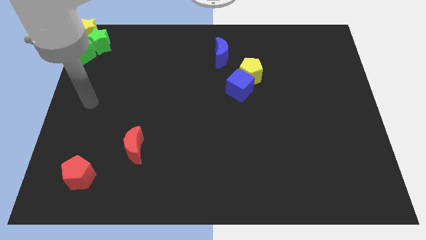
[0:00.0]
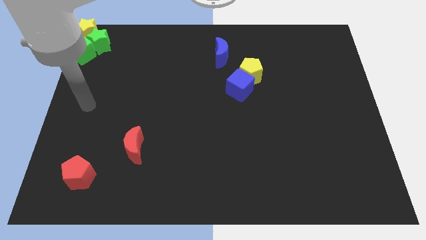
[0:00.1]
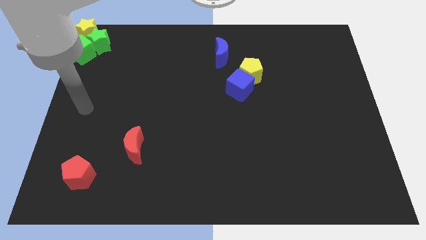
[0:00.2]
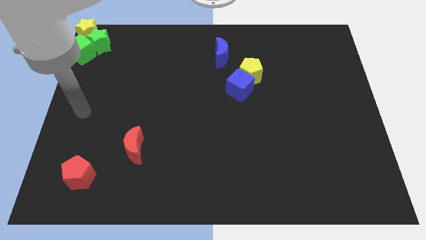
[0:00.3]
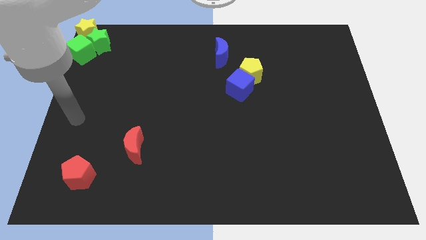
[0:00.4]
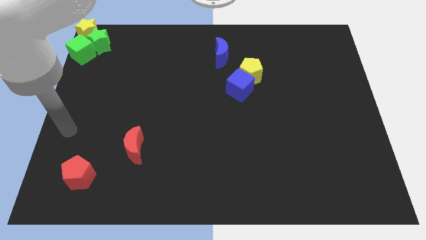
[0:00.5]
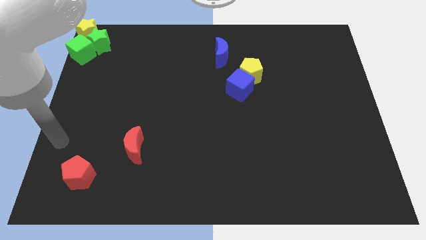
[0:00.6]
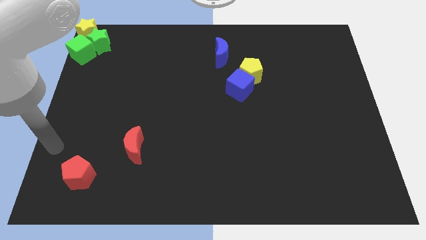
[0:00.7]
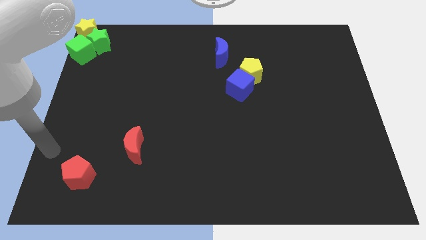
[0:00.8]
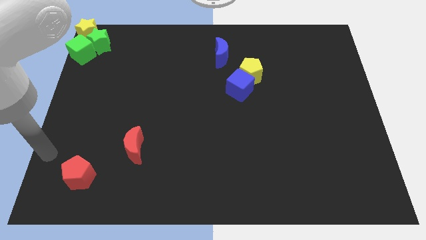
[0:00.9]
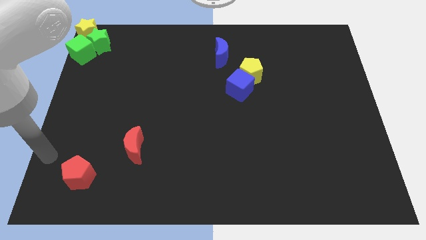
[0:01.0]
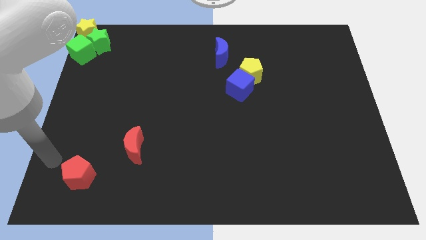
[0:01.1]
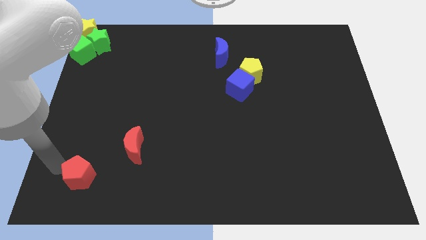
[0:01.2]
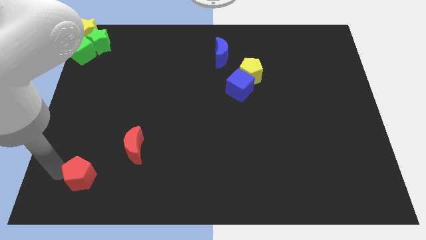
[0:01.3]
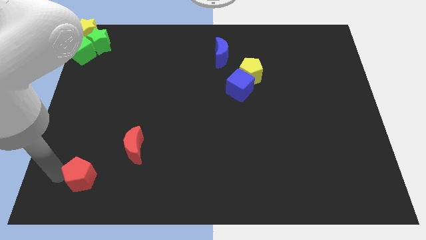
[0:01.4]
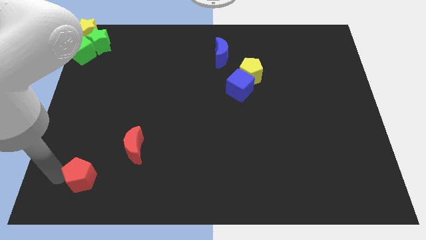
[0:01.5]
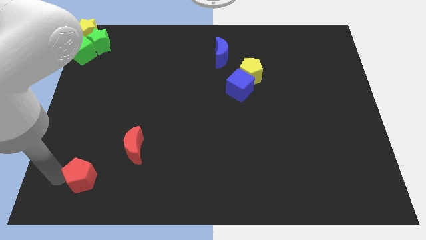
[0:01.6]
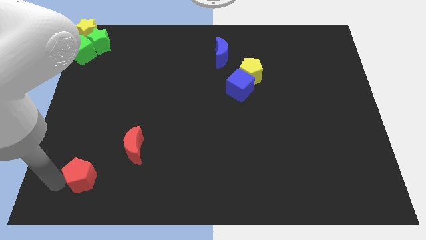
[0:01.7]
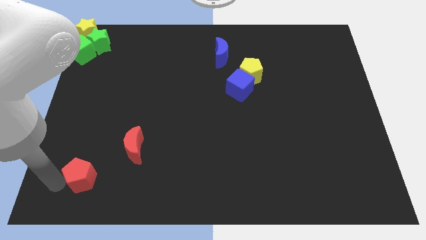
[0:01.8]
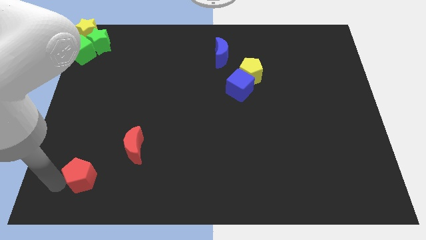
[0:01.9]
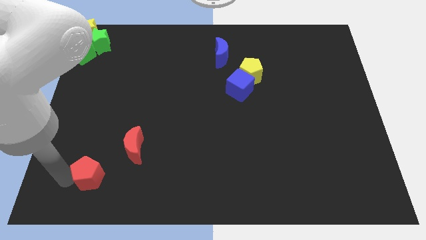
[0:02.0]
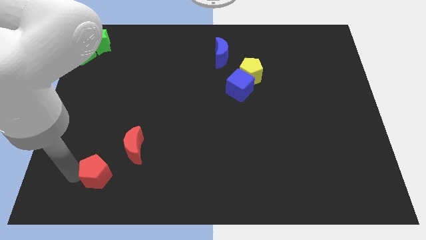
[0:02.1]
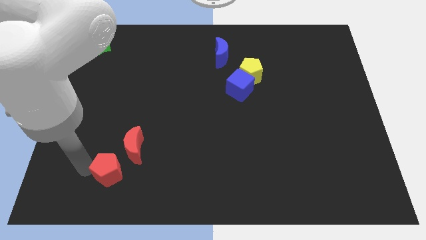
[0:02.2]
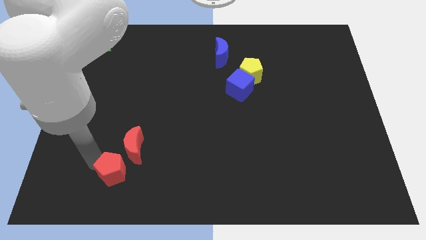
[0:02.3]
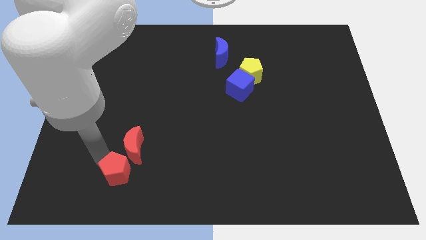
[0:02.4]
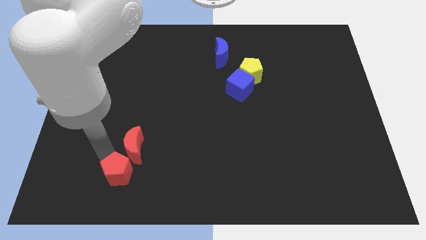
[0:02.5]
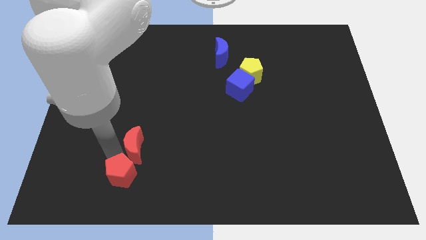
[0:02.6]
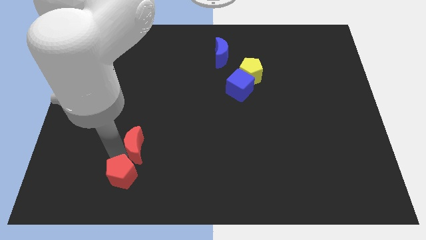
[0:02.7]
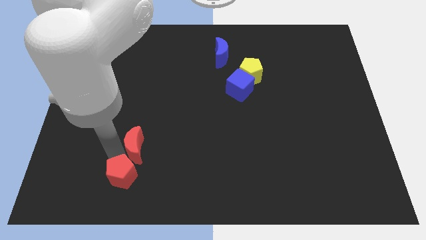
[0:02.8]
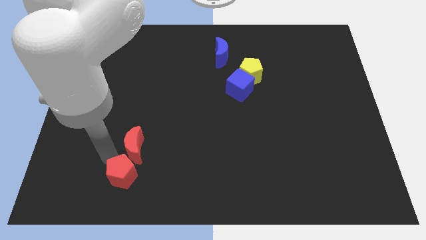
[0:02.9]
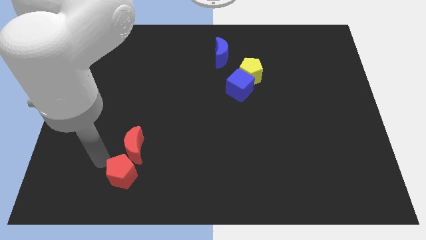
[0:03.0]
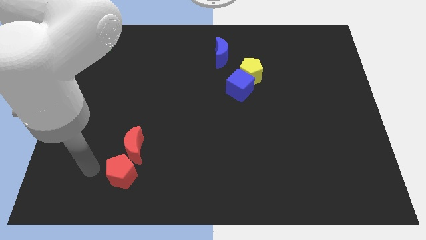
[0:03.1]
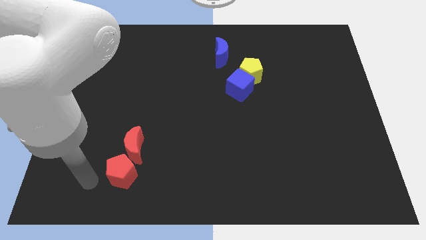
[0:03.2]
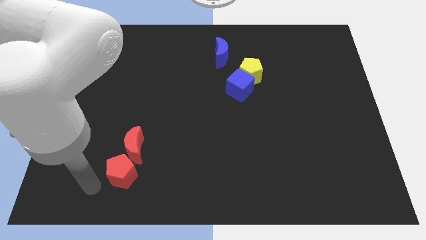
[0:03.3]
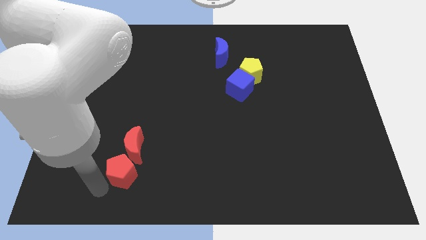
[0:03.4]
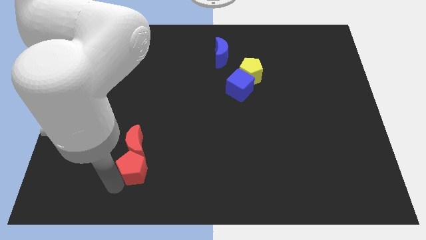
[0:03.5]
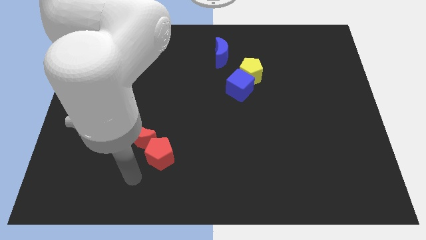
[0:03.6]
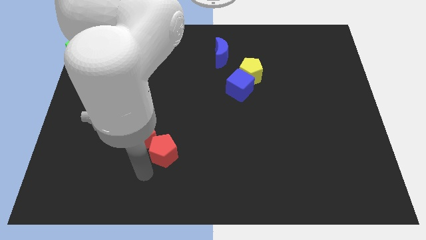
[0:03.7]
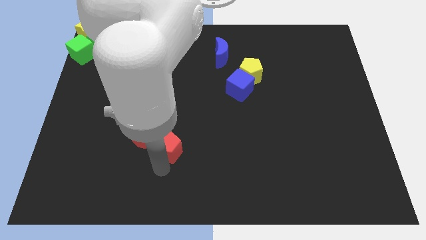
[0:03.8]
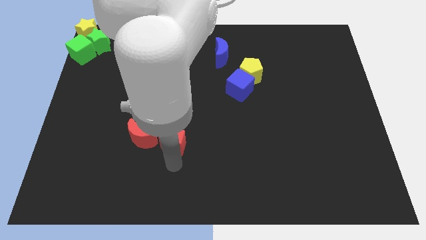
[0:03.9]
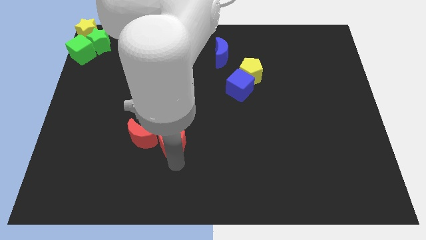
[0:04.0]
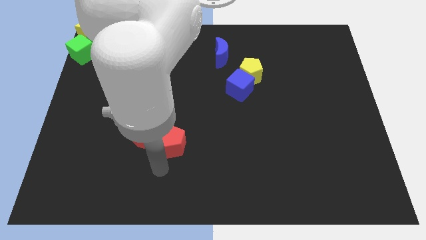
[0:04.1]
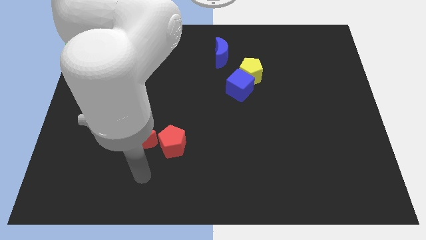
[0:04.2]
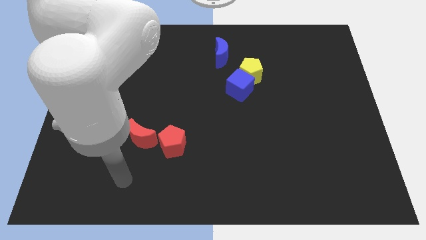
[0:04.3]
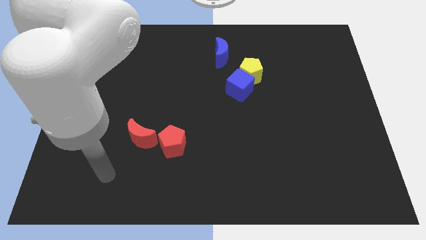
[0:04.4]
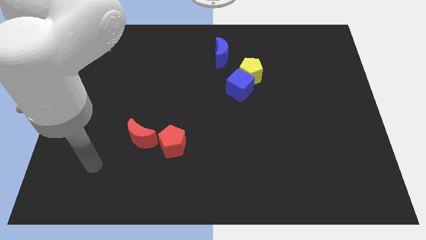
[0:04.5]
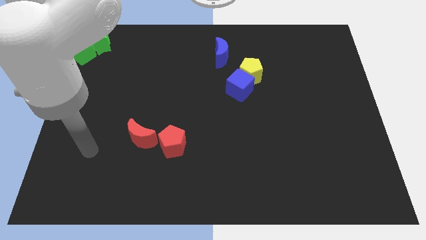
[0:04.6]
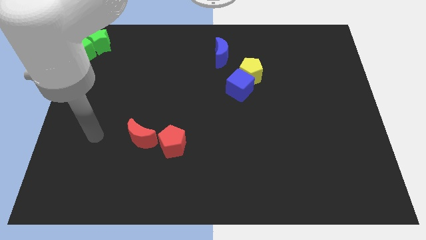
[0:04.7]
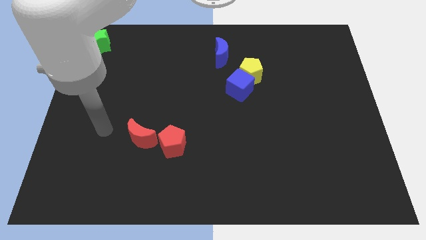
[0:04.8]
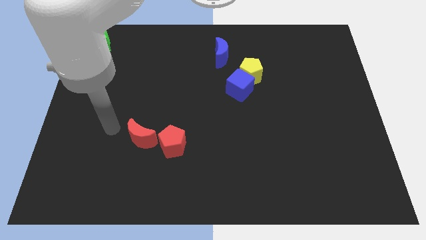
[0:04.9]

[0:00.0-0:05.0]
place the red pentagon right to the red moon

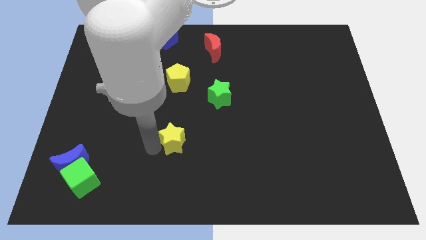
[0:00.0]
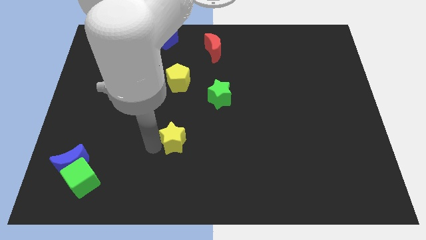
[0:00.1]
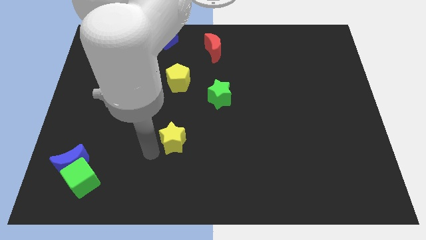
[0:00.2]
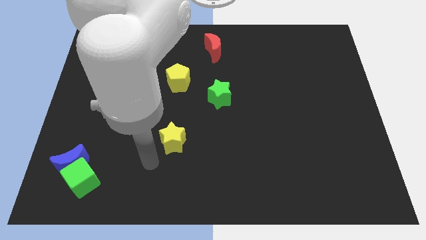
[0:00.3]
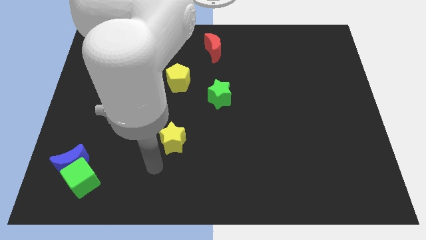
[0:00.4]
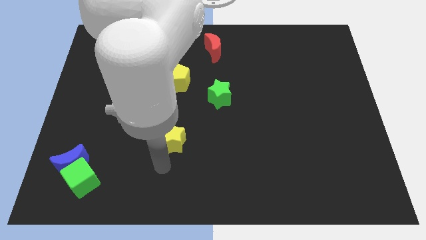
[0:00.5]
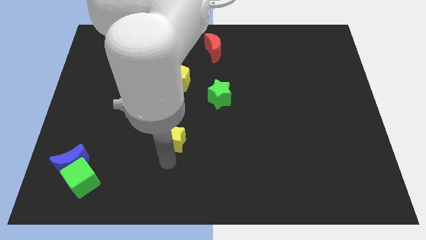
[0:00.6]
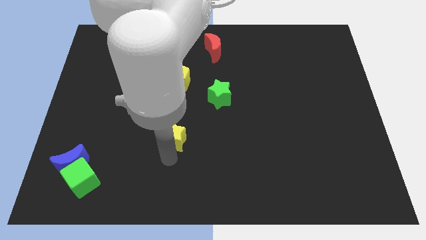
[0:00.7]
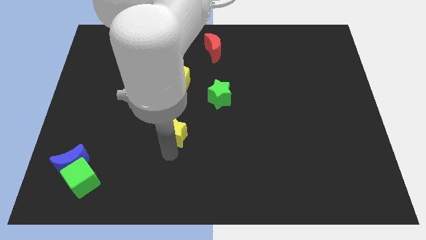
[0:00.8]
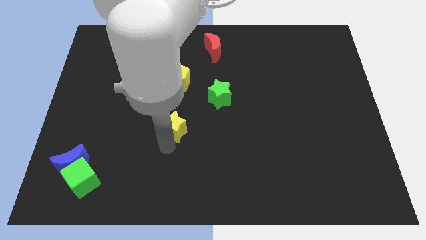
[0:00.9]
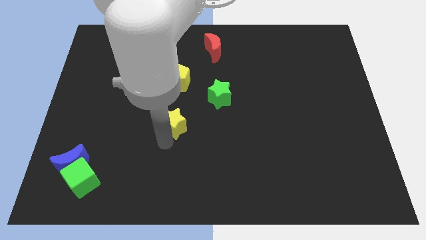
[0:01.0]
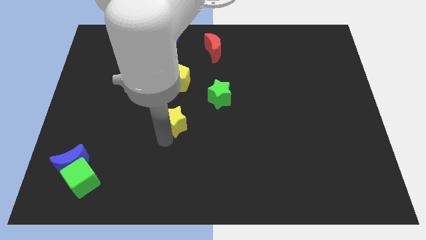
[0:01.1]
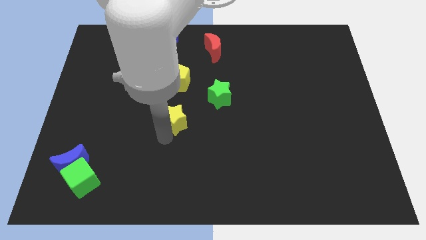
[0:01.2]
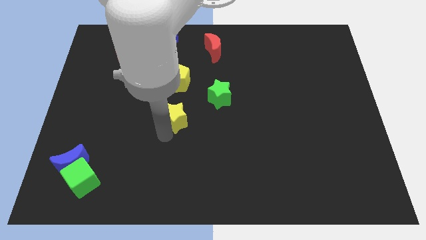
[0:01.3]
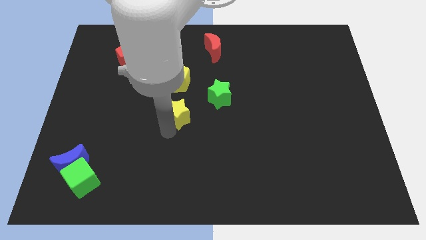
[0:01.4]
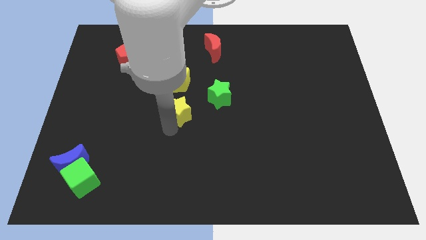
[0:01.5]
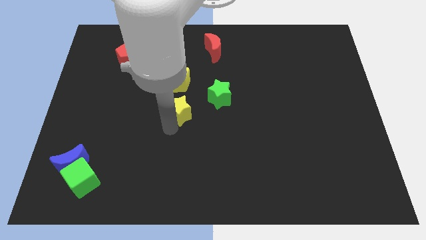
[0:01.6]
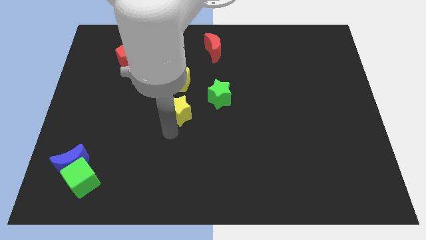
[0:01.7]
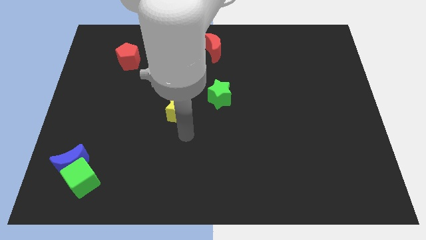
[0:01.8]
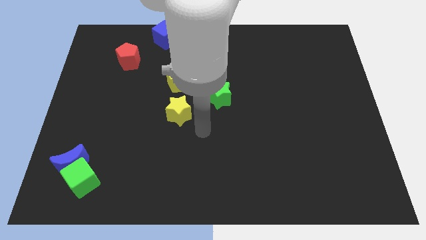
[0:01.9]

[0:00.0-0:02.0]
push the yellow star to the bottom side of yellow pentagon

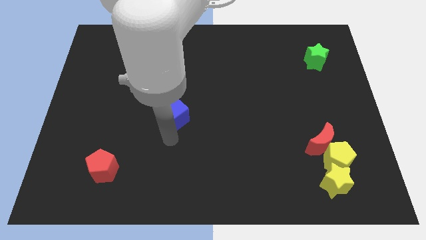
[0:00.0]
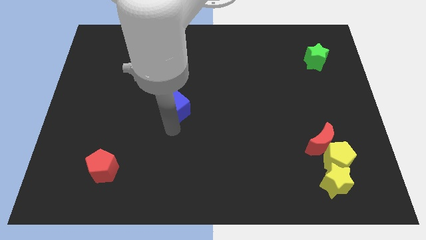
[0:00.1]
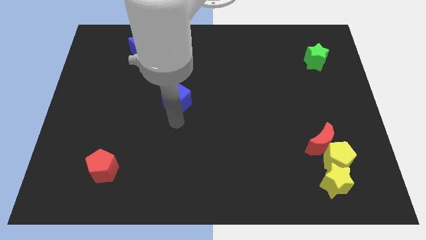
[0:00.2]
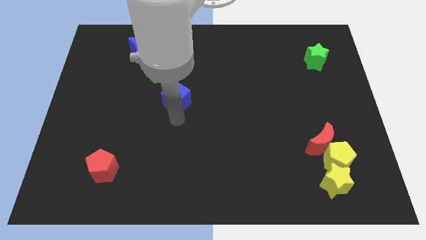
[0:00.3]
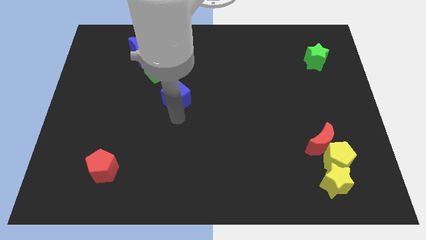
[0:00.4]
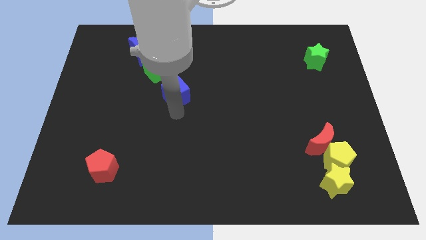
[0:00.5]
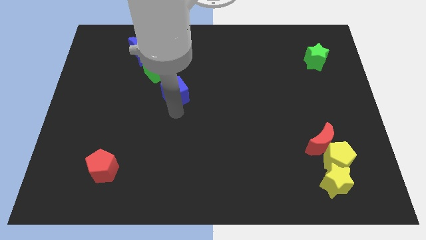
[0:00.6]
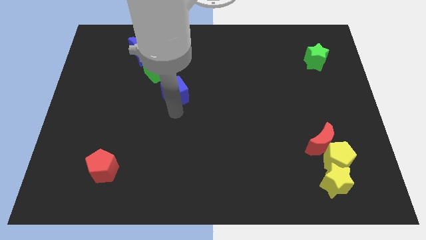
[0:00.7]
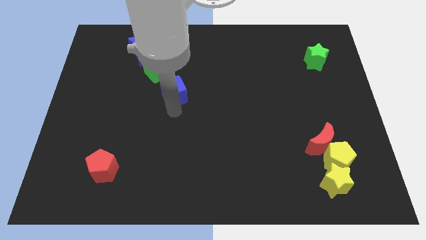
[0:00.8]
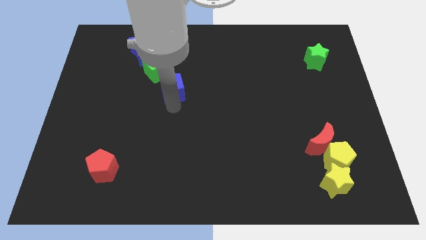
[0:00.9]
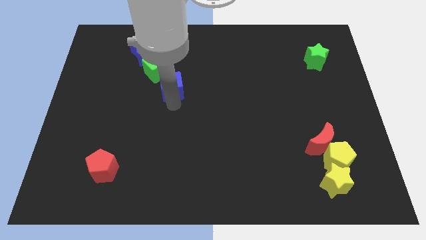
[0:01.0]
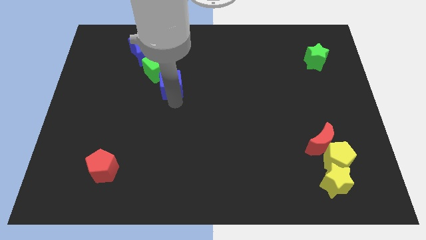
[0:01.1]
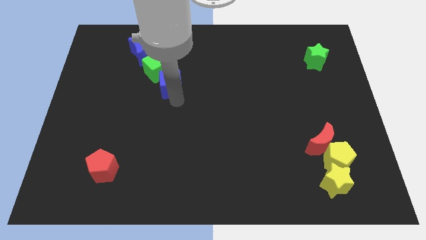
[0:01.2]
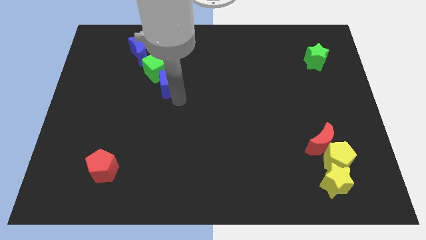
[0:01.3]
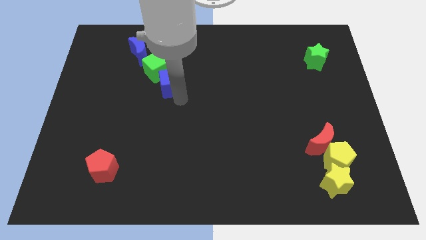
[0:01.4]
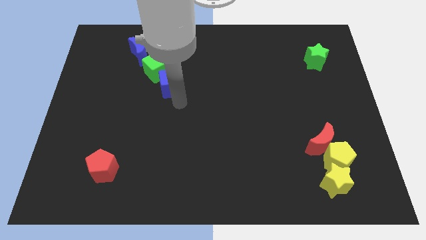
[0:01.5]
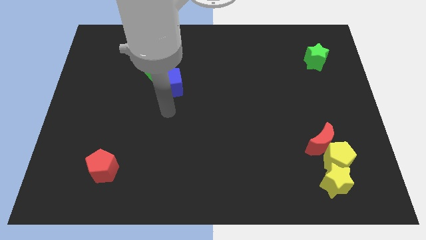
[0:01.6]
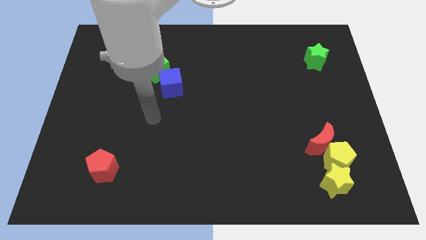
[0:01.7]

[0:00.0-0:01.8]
push the blue cube to the bottom right side of the green cube

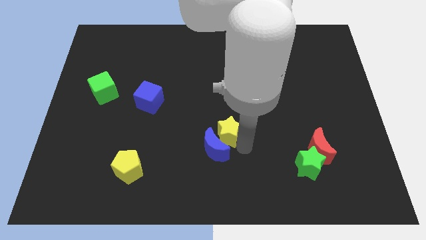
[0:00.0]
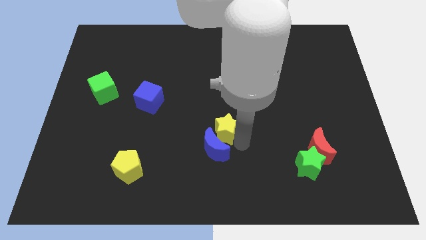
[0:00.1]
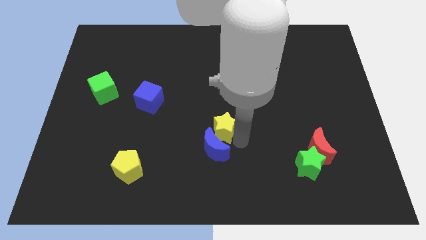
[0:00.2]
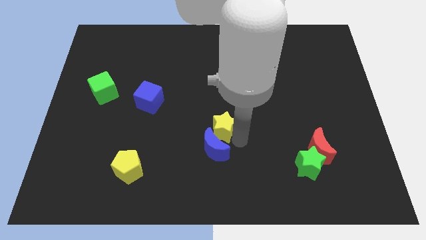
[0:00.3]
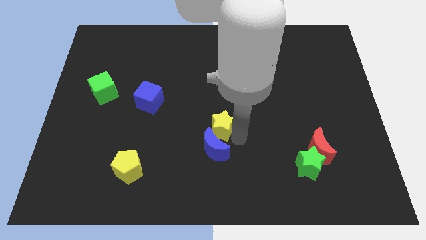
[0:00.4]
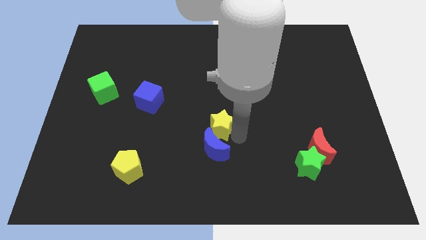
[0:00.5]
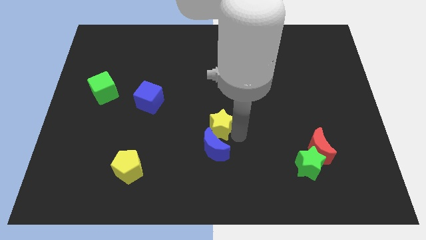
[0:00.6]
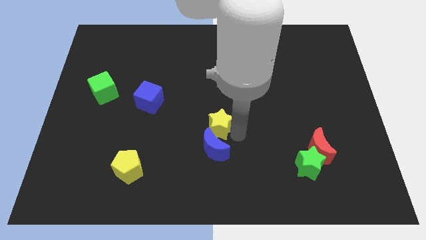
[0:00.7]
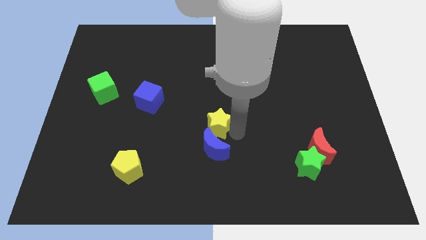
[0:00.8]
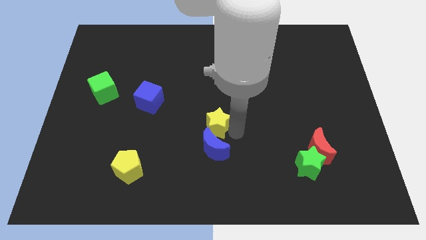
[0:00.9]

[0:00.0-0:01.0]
place yellow star to the top of blue moon
